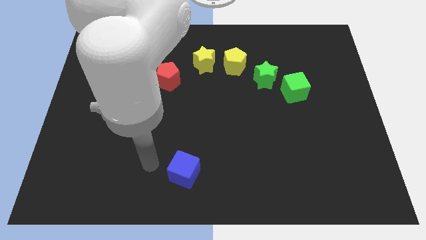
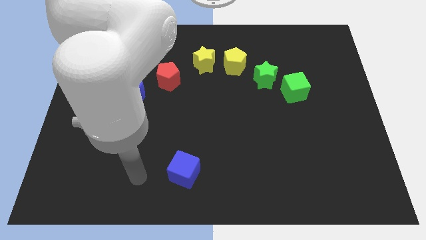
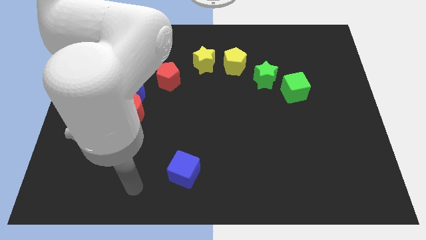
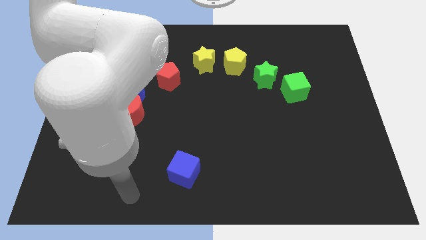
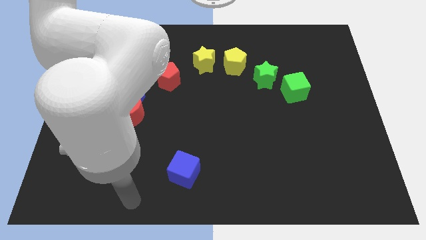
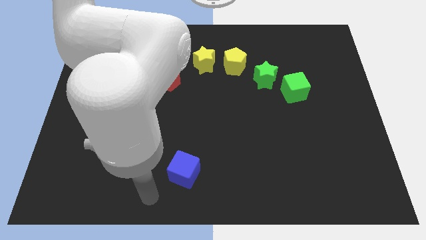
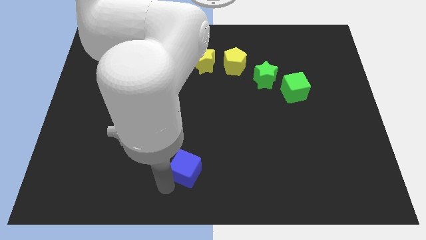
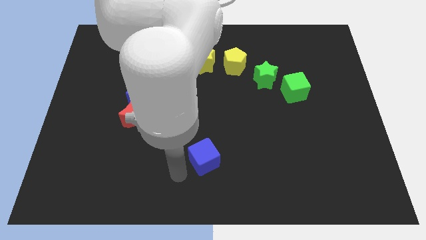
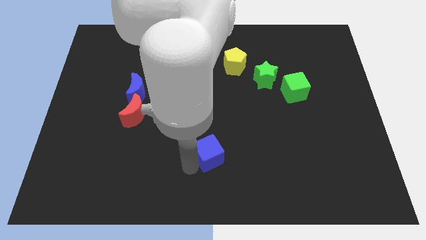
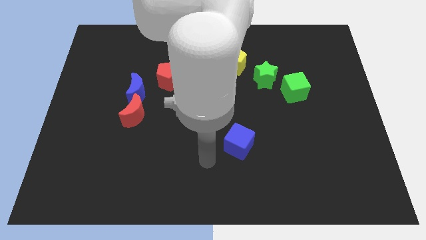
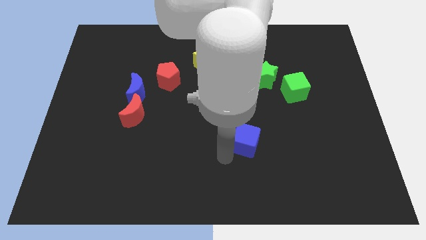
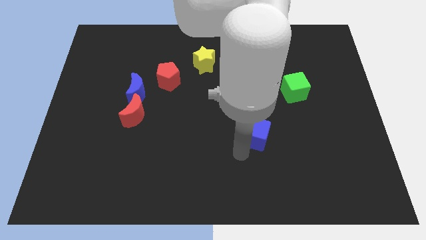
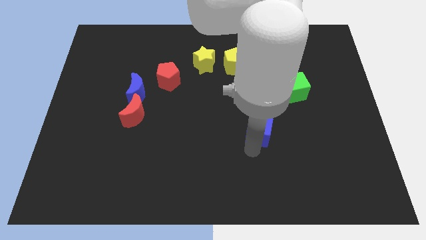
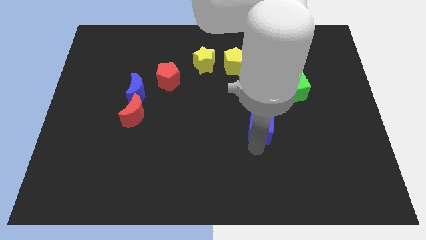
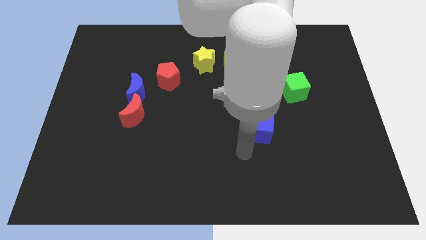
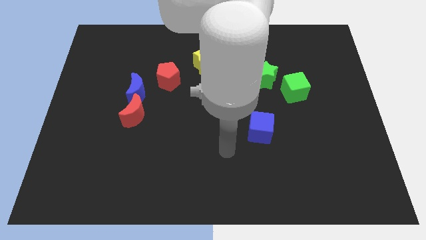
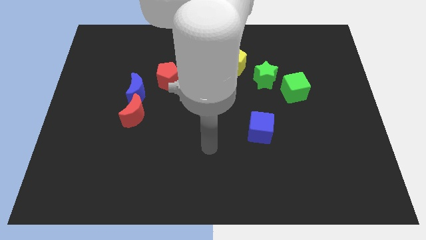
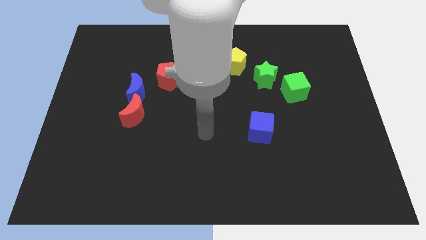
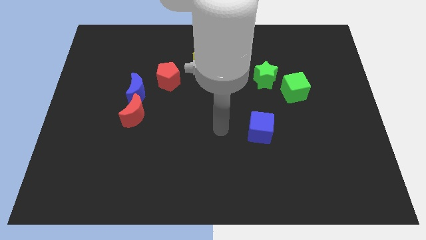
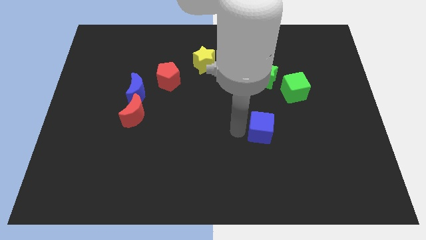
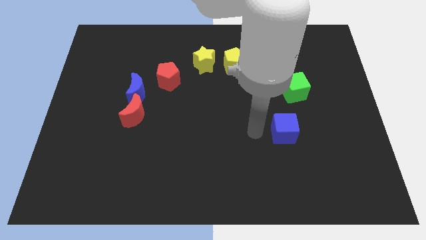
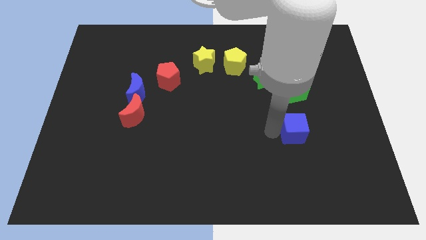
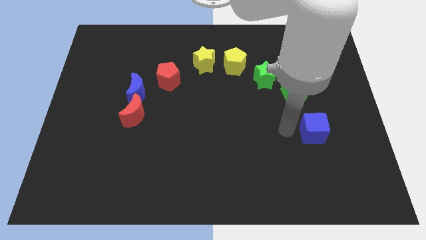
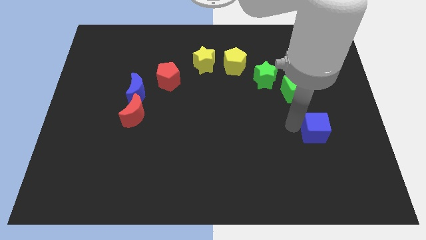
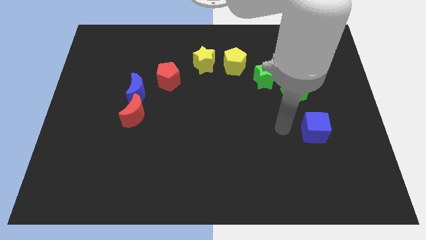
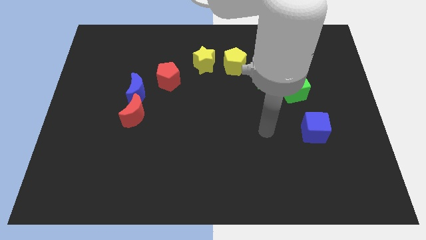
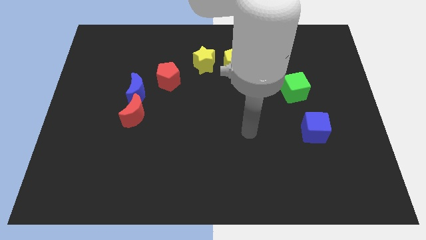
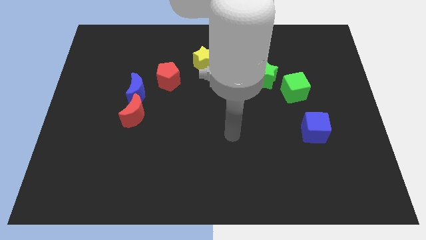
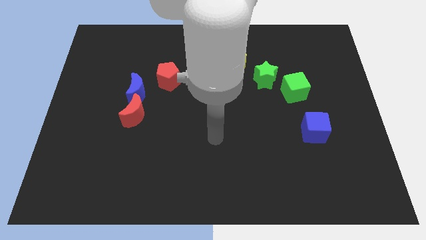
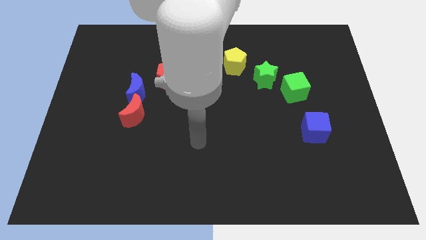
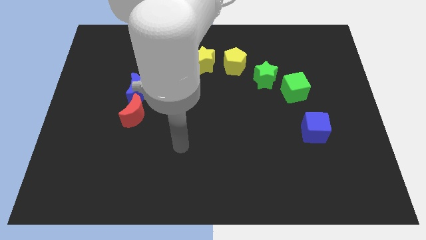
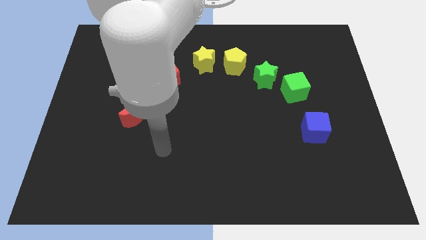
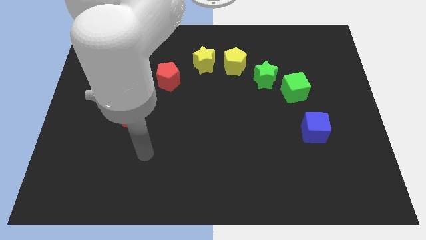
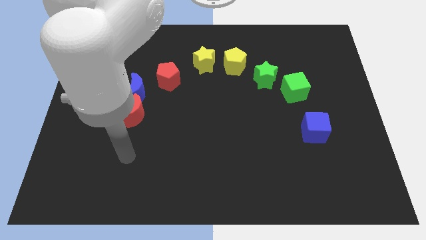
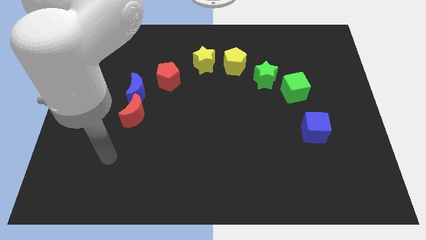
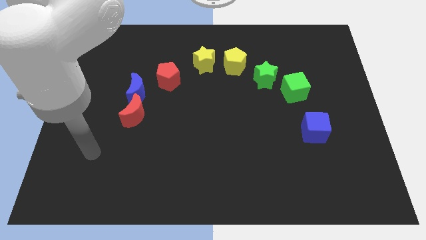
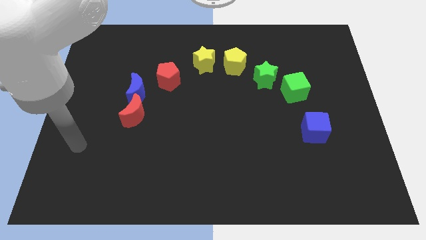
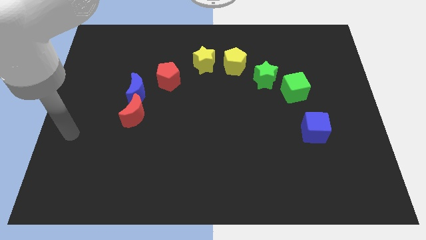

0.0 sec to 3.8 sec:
place blue block down to the green block

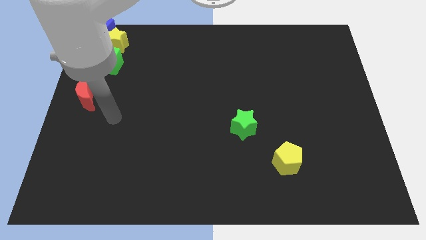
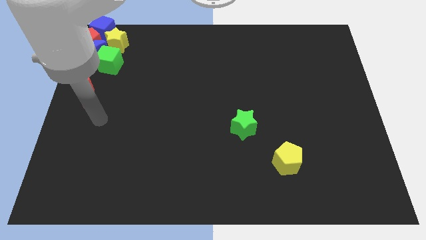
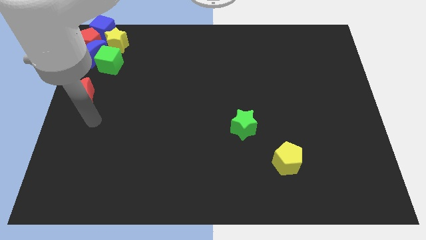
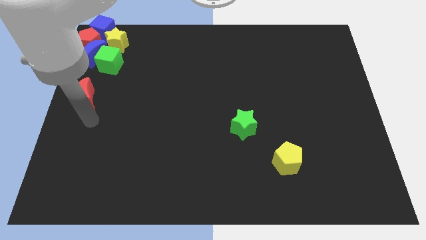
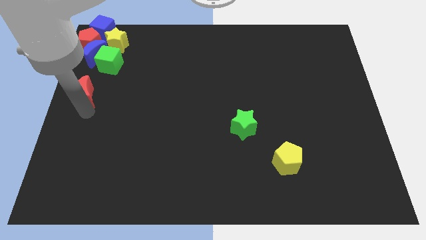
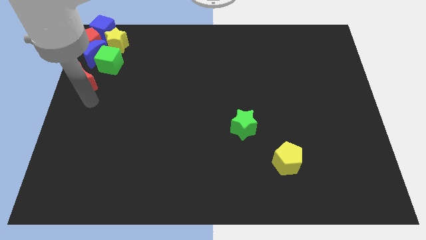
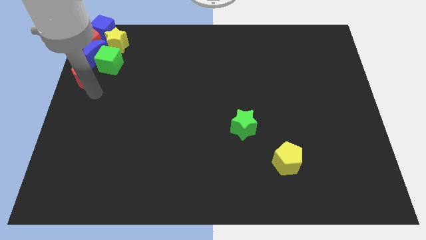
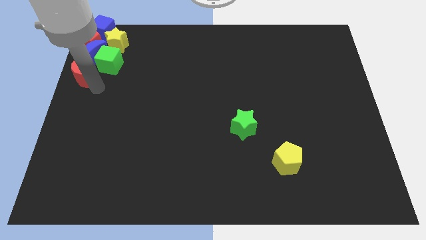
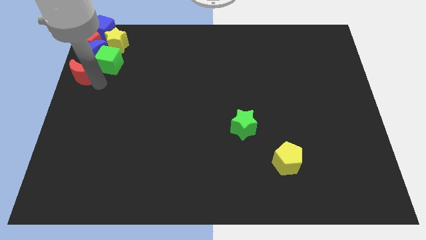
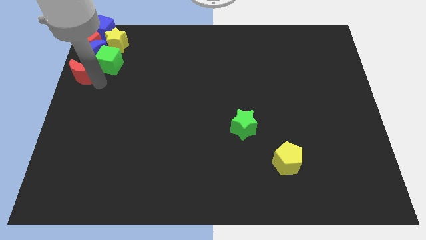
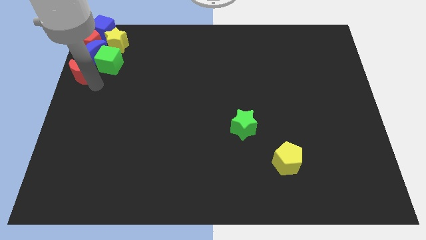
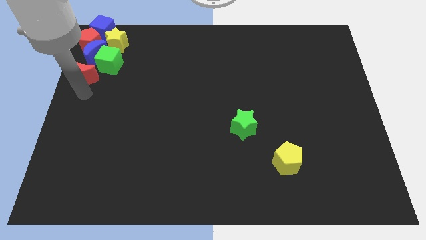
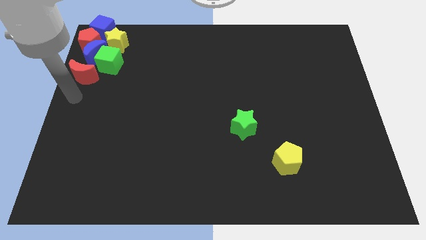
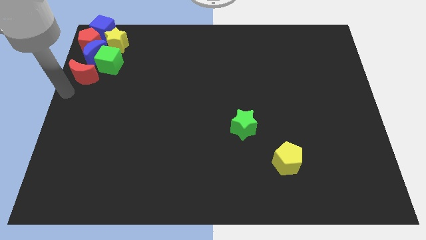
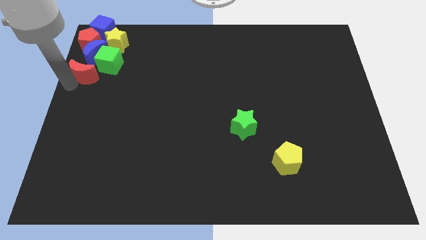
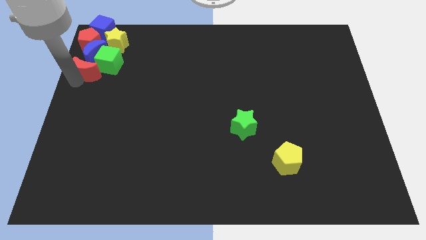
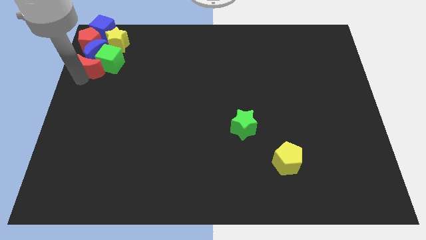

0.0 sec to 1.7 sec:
move the red crescent to the bottom side of the blue crescent

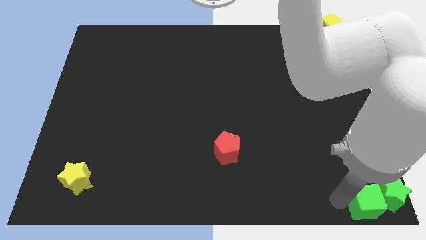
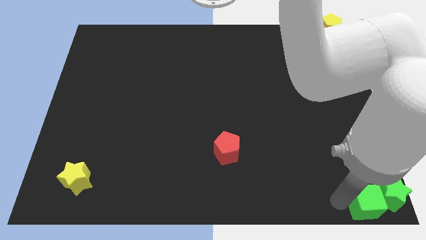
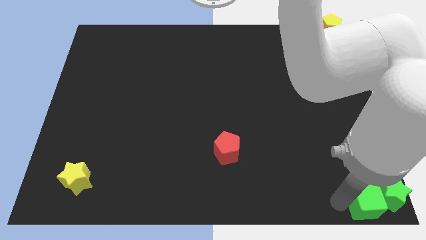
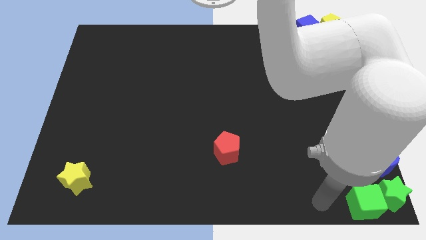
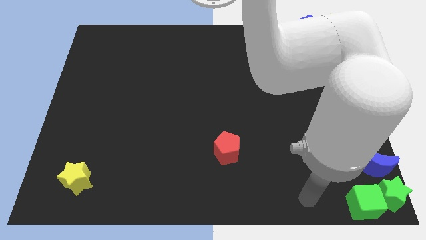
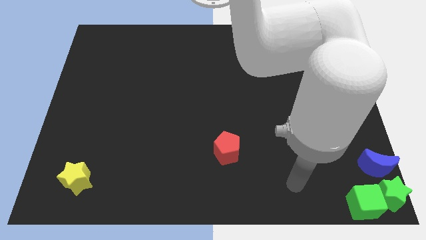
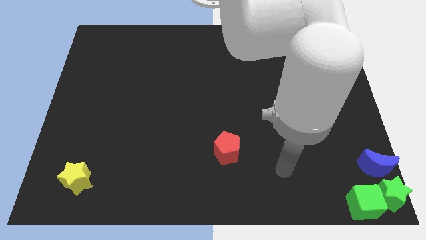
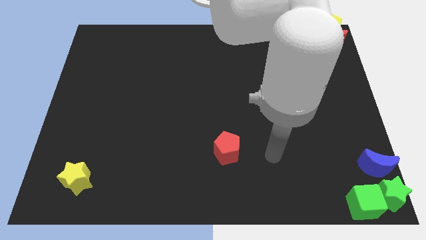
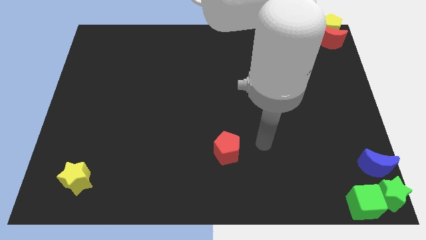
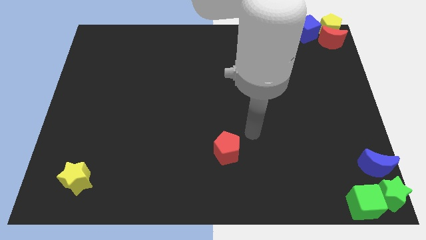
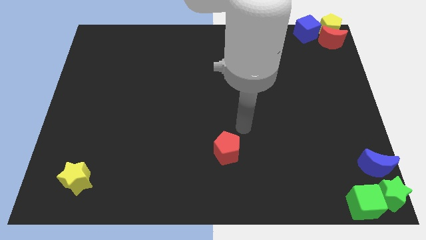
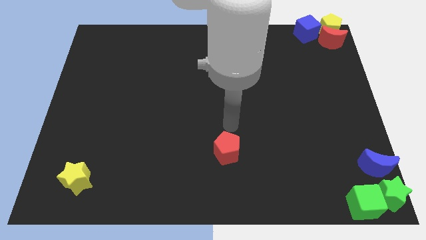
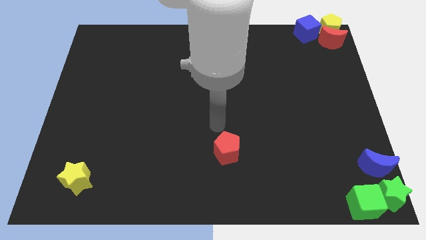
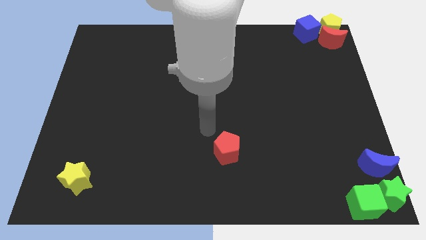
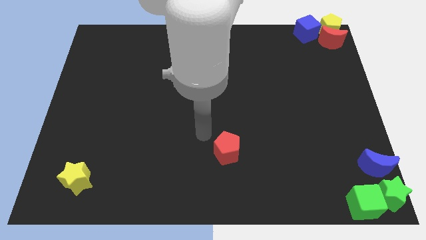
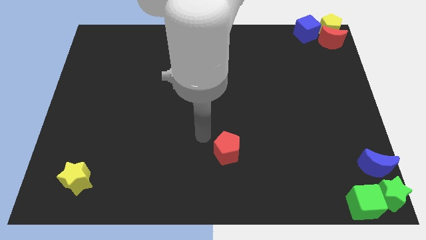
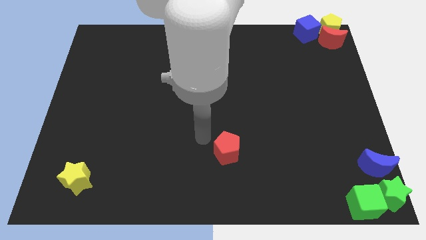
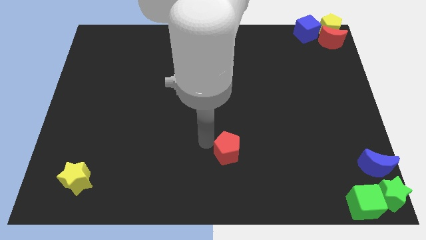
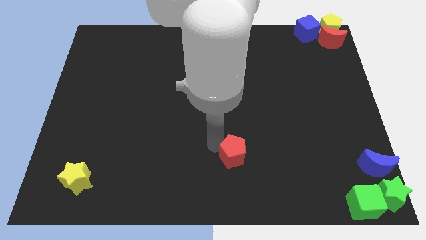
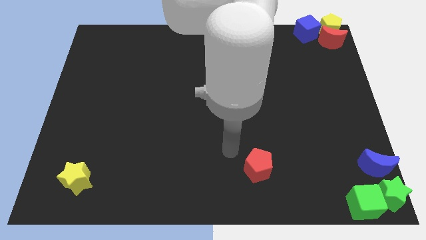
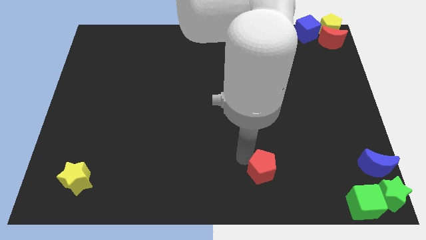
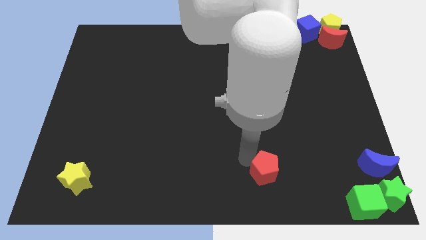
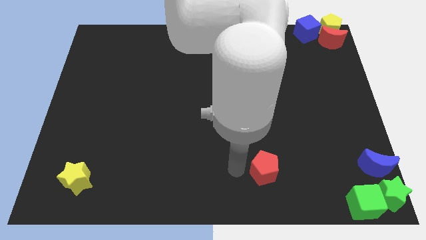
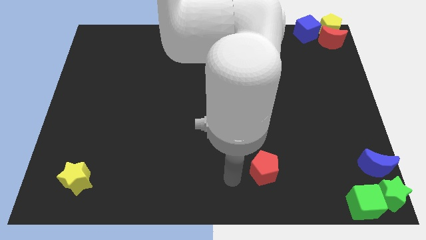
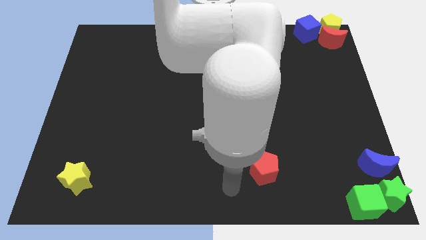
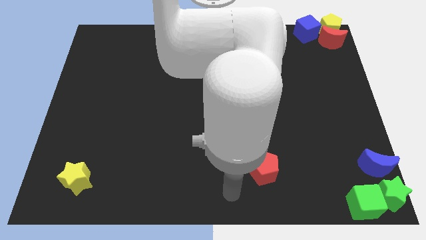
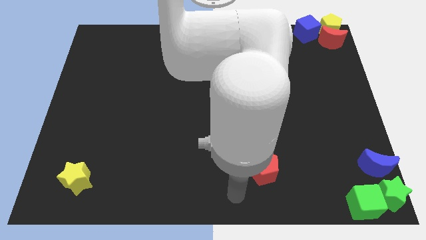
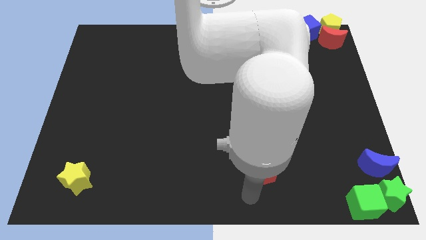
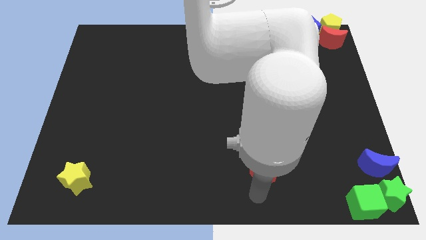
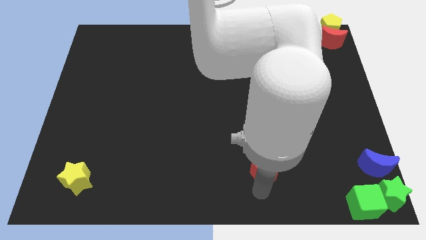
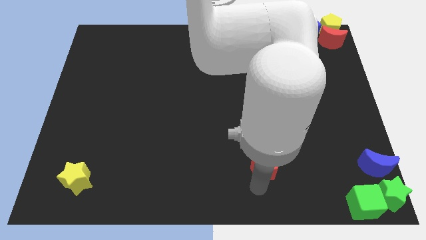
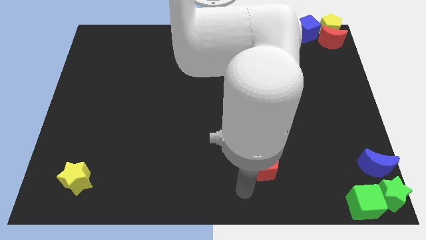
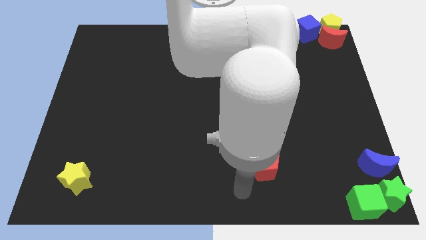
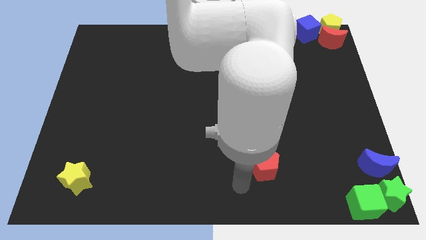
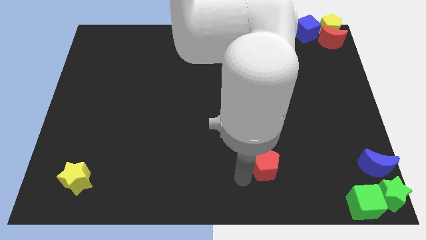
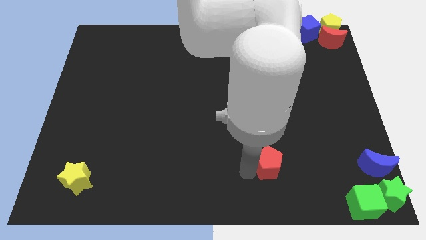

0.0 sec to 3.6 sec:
push the red pentagon towards the group of blocks at the bottom right of the table
